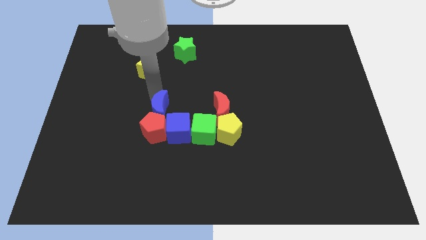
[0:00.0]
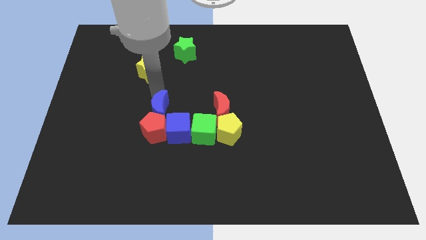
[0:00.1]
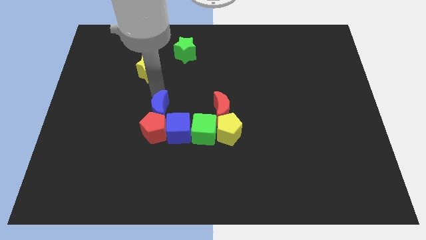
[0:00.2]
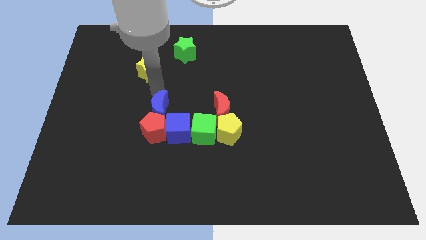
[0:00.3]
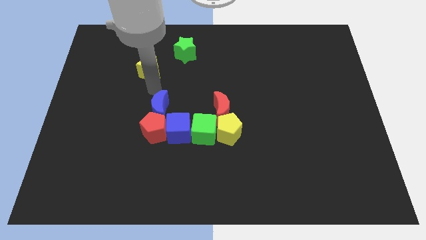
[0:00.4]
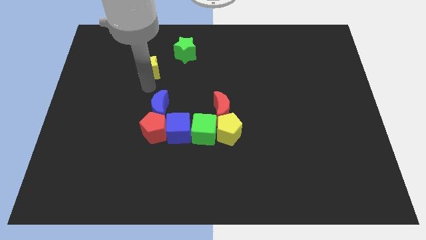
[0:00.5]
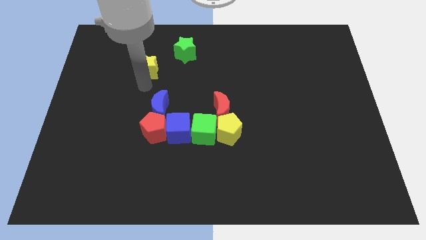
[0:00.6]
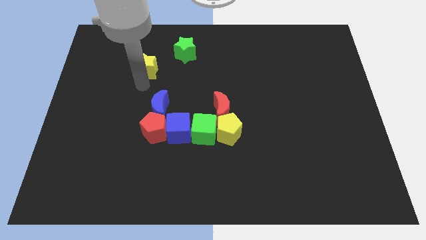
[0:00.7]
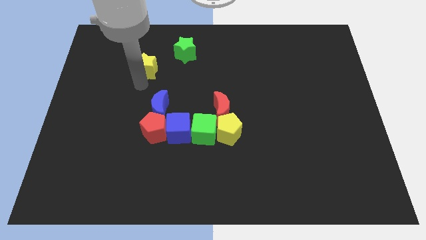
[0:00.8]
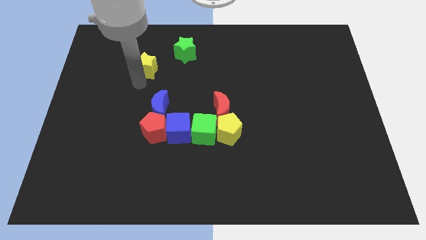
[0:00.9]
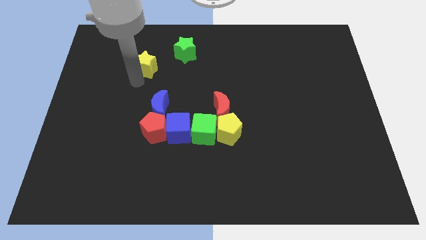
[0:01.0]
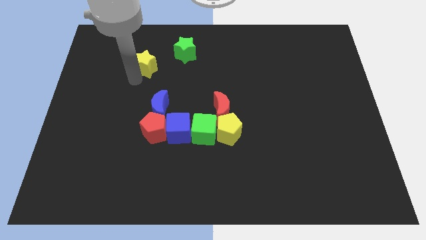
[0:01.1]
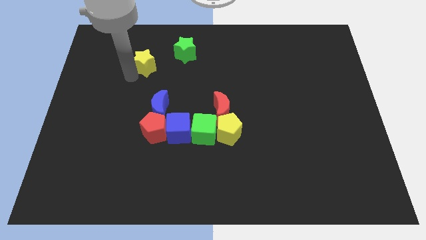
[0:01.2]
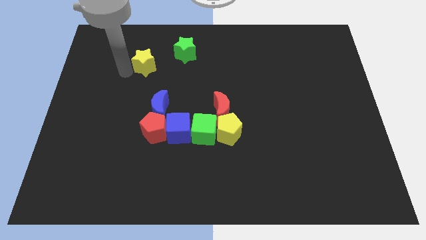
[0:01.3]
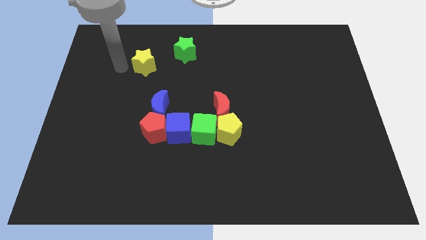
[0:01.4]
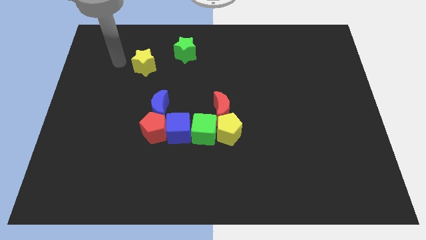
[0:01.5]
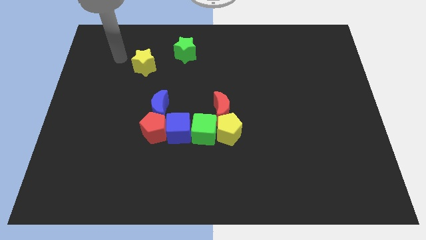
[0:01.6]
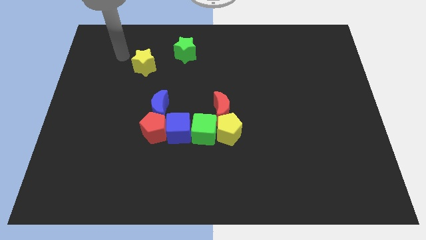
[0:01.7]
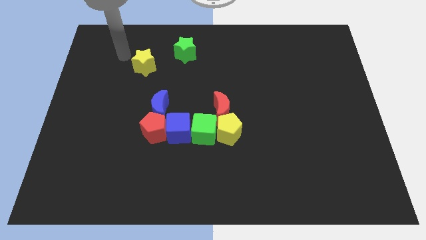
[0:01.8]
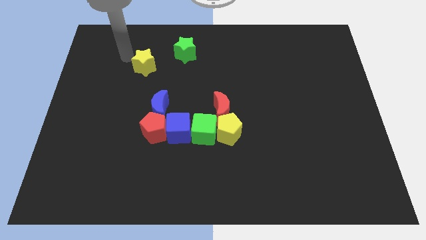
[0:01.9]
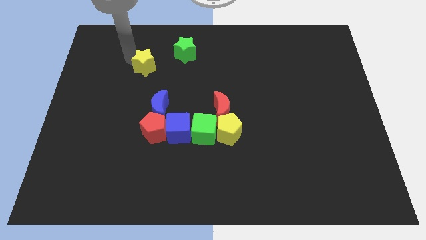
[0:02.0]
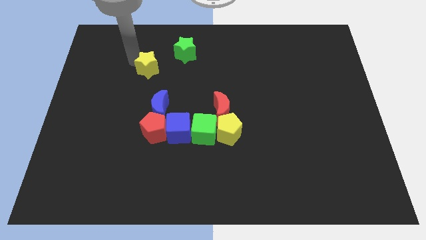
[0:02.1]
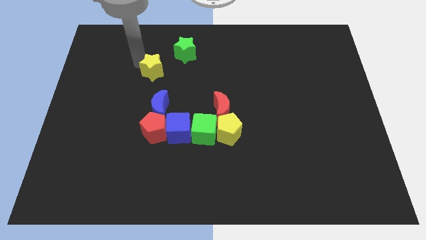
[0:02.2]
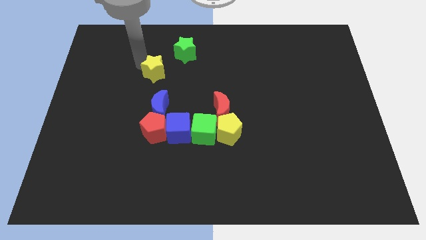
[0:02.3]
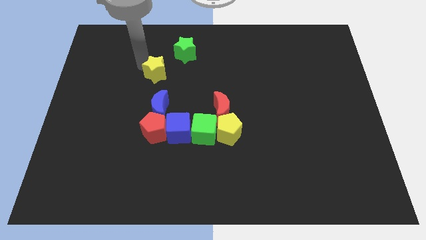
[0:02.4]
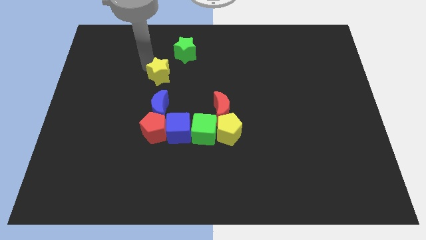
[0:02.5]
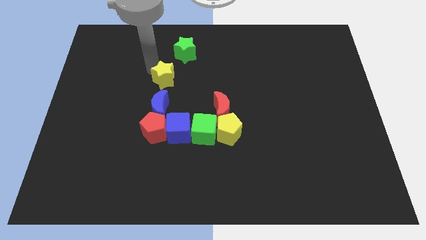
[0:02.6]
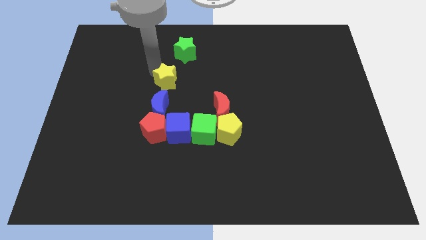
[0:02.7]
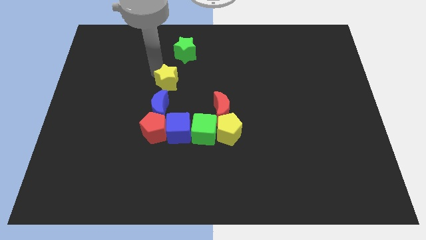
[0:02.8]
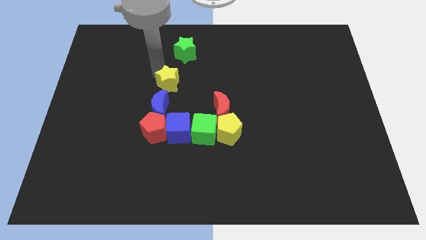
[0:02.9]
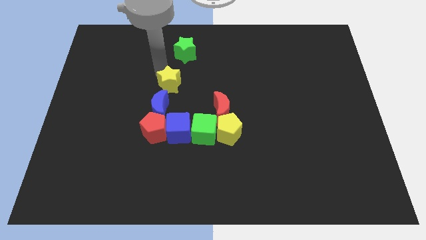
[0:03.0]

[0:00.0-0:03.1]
place the yellow star above the blue moon

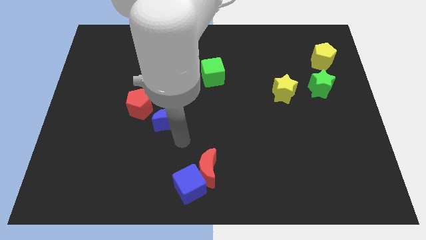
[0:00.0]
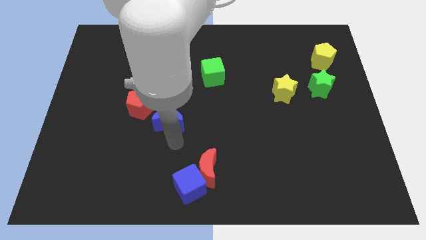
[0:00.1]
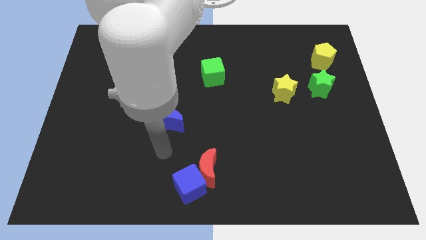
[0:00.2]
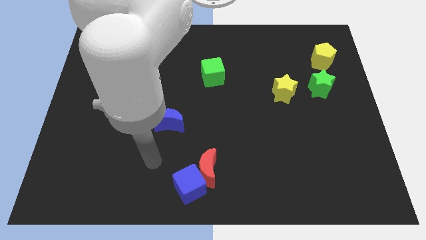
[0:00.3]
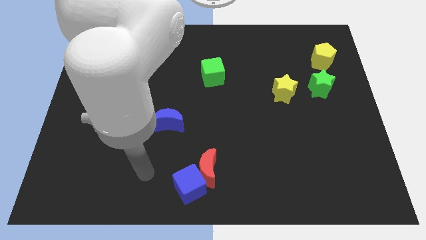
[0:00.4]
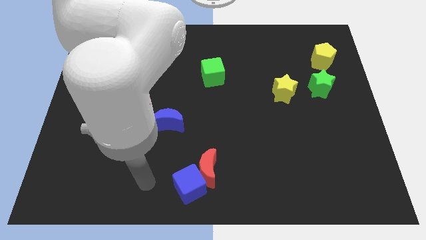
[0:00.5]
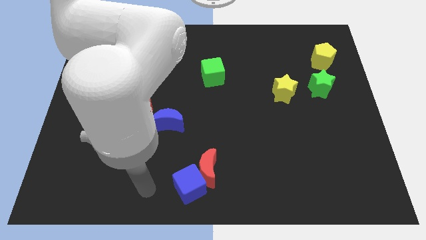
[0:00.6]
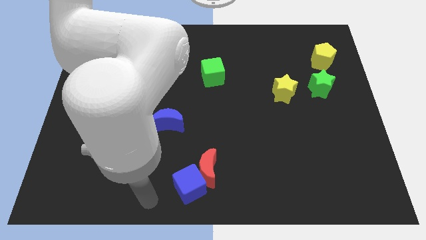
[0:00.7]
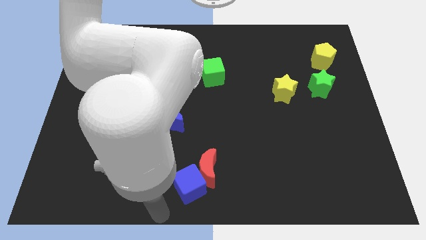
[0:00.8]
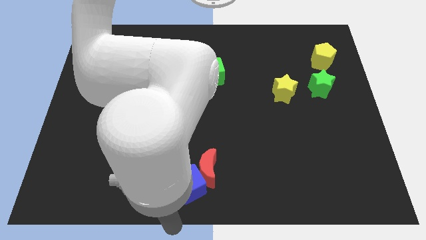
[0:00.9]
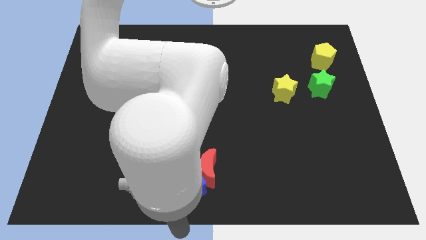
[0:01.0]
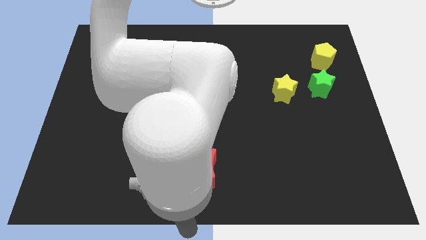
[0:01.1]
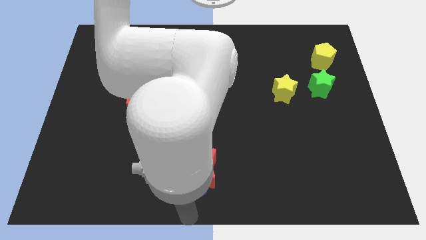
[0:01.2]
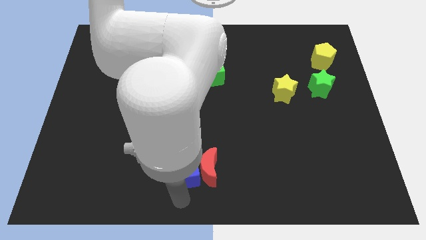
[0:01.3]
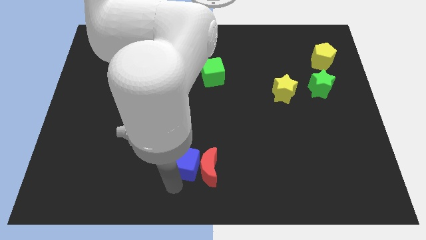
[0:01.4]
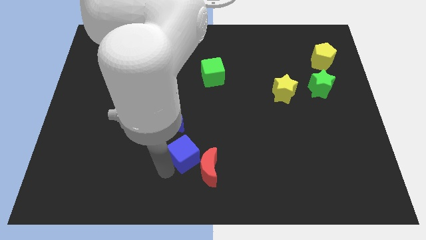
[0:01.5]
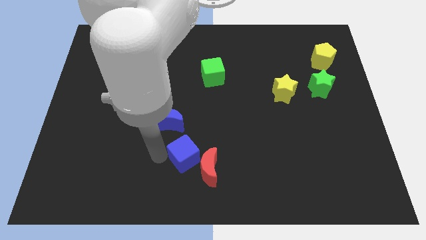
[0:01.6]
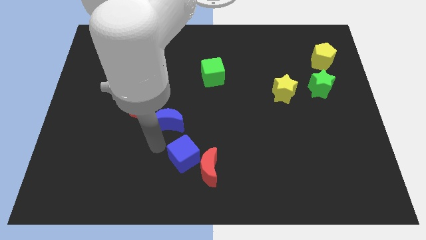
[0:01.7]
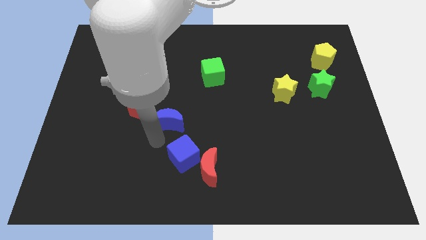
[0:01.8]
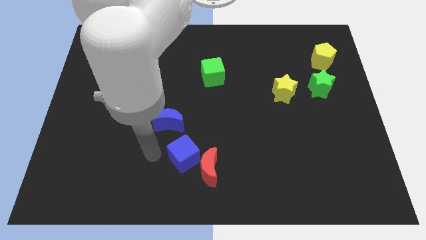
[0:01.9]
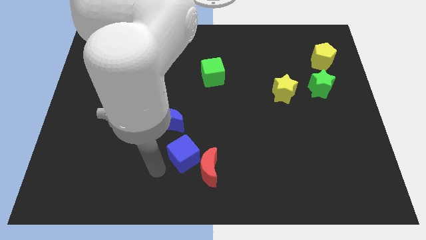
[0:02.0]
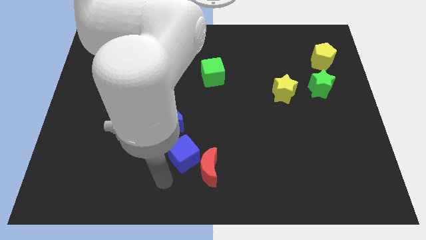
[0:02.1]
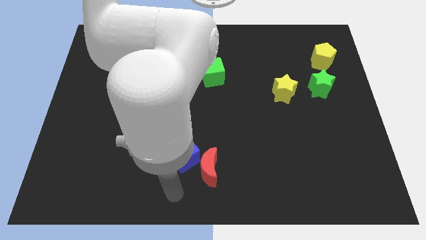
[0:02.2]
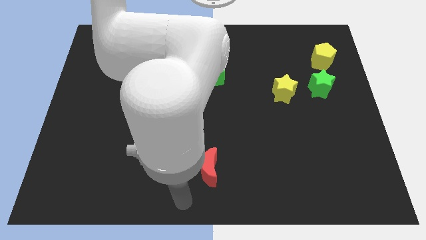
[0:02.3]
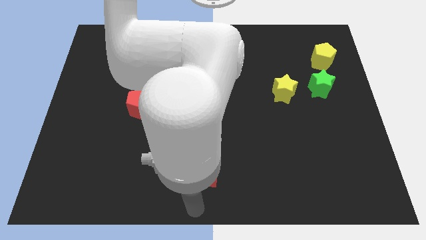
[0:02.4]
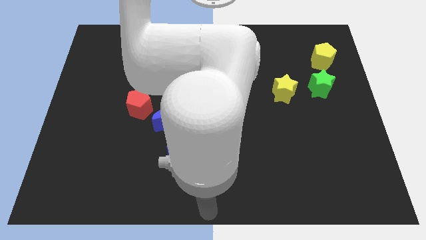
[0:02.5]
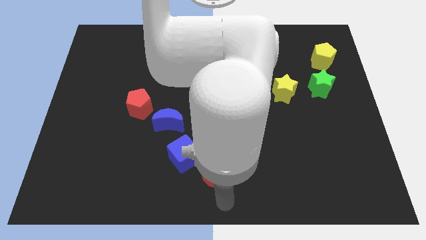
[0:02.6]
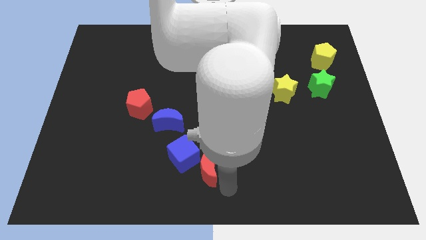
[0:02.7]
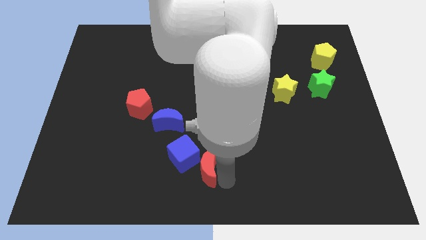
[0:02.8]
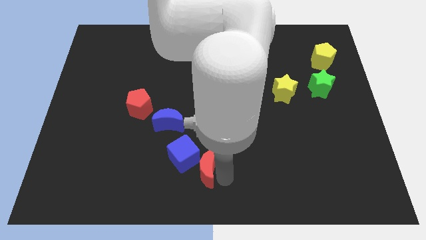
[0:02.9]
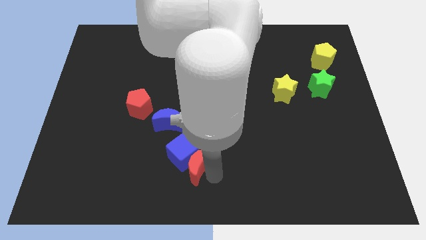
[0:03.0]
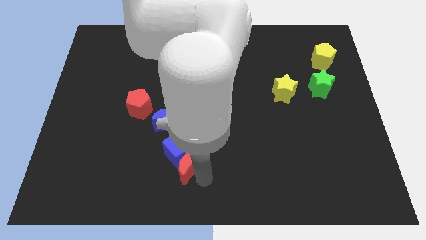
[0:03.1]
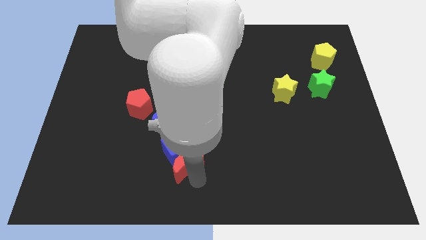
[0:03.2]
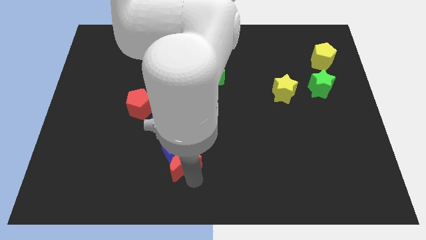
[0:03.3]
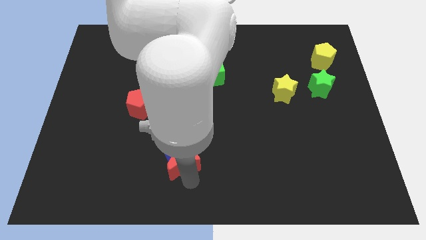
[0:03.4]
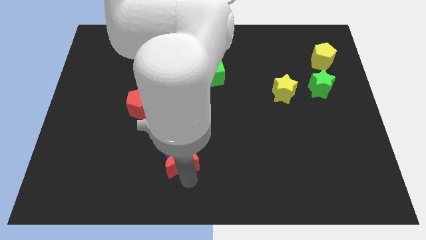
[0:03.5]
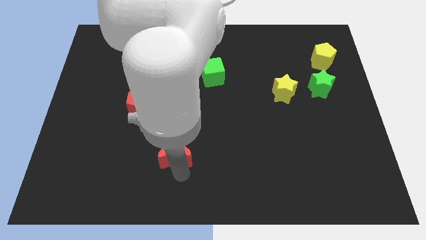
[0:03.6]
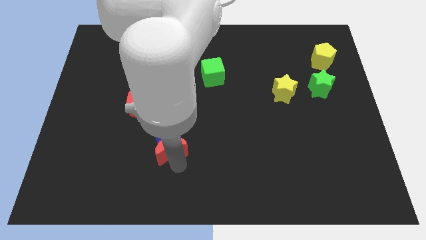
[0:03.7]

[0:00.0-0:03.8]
push the red moon and blue cube upward

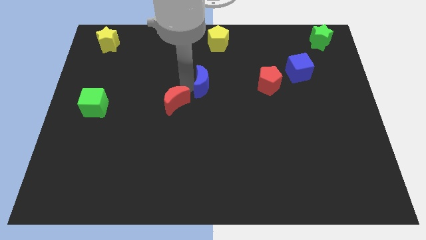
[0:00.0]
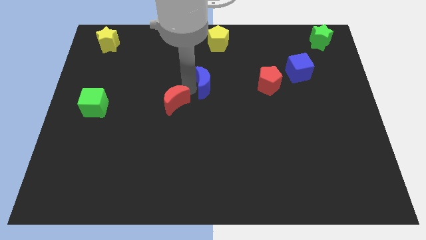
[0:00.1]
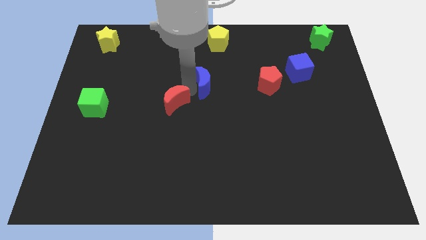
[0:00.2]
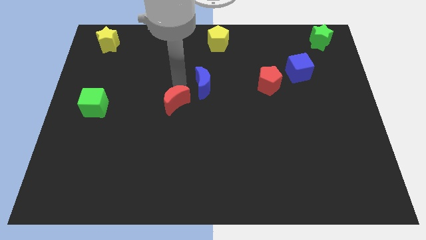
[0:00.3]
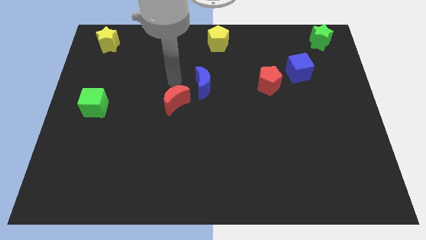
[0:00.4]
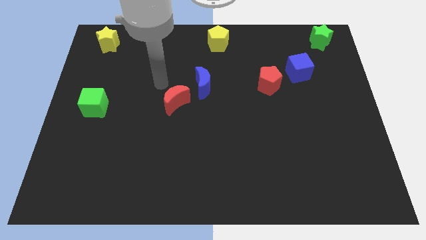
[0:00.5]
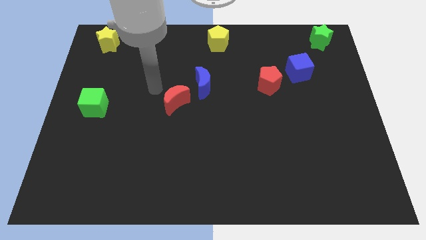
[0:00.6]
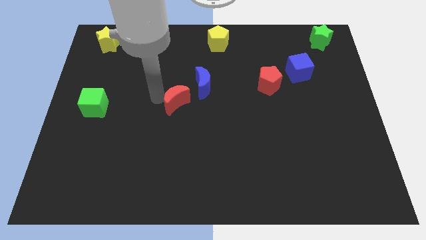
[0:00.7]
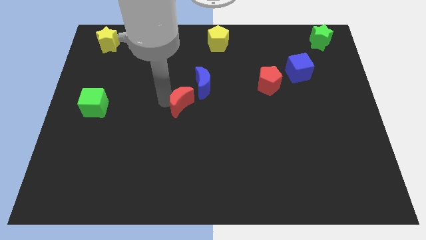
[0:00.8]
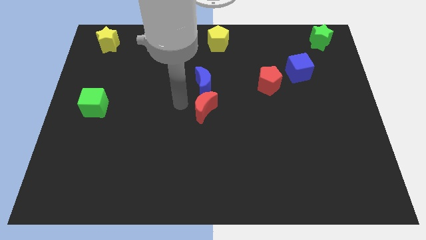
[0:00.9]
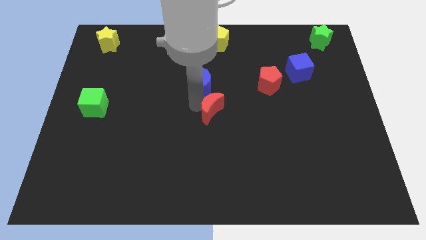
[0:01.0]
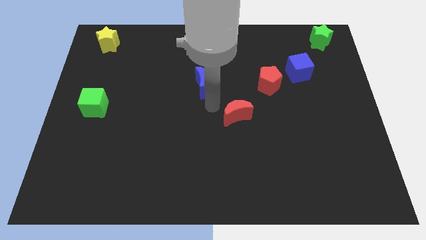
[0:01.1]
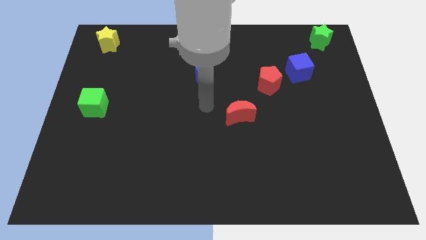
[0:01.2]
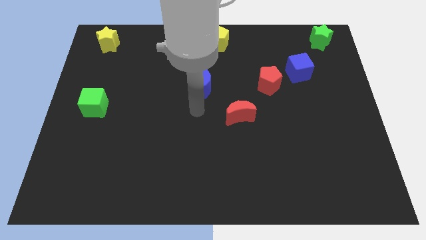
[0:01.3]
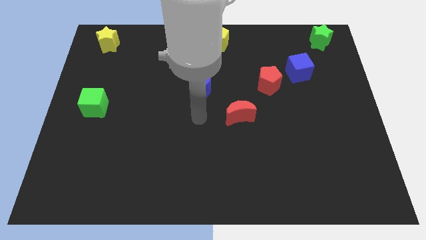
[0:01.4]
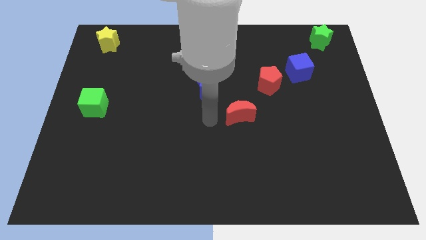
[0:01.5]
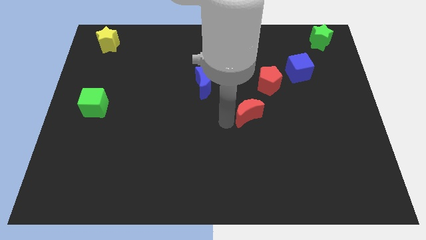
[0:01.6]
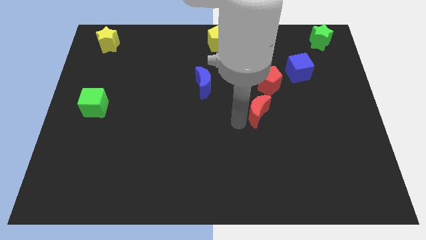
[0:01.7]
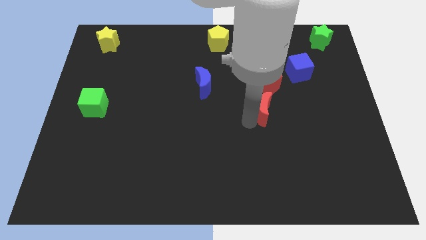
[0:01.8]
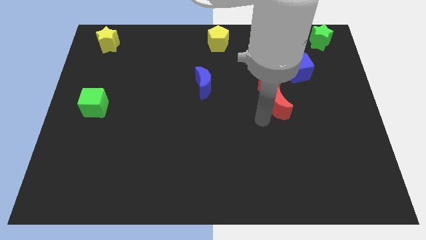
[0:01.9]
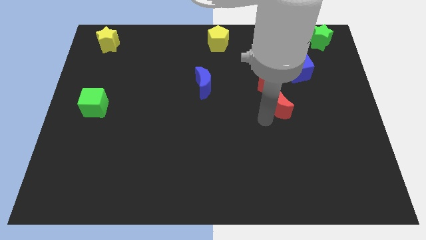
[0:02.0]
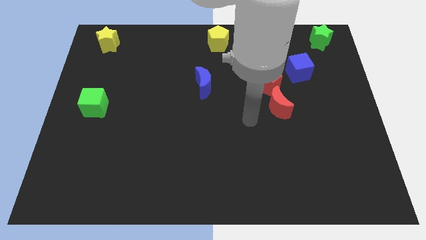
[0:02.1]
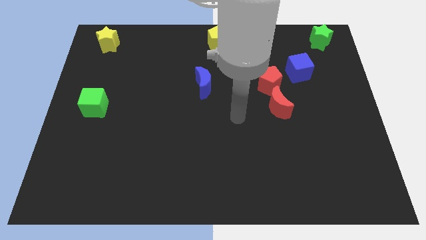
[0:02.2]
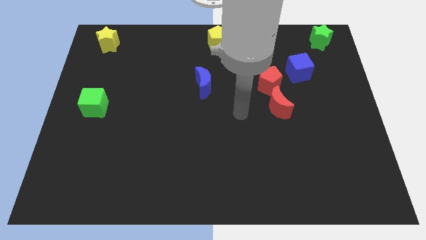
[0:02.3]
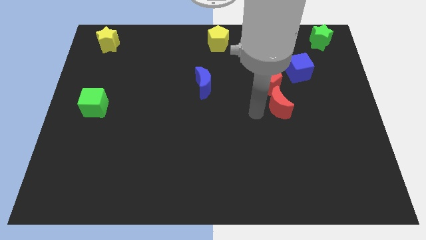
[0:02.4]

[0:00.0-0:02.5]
push the red crescent to the bottom of the red pentagon
